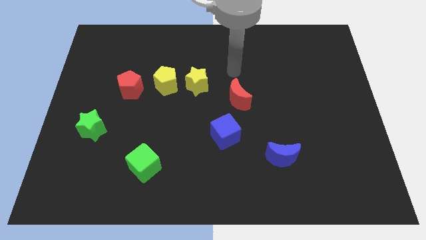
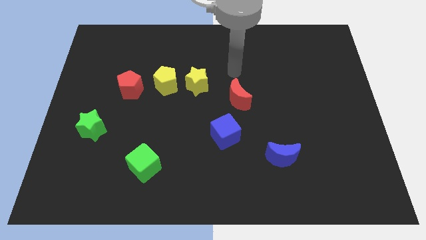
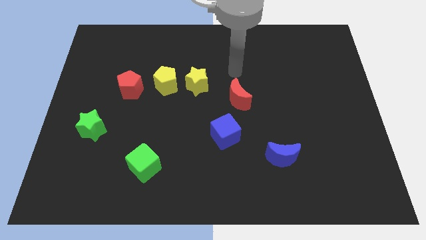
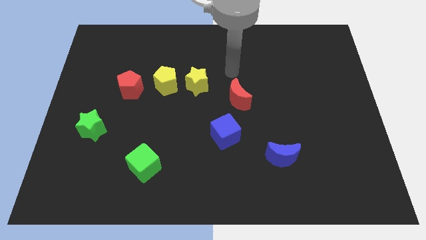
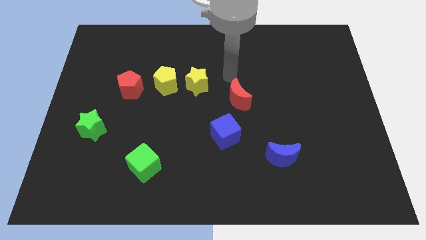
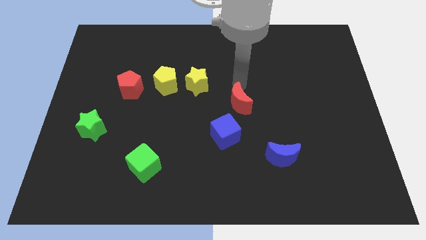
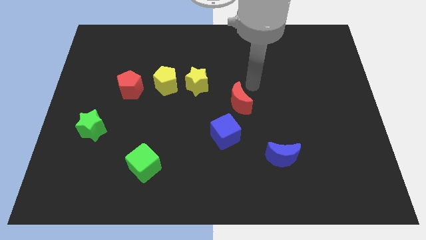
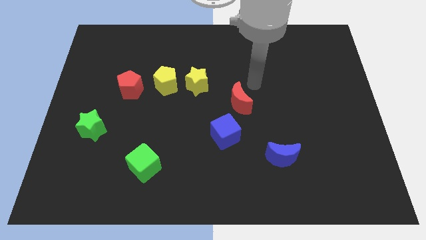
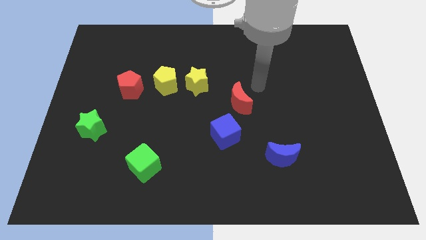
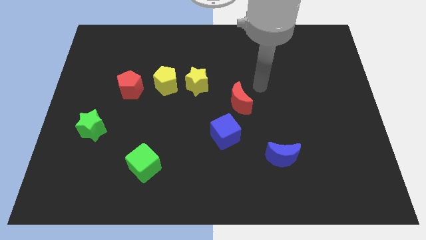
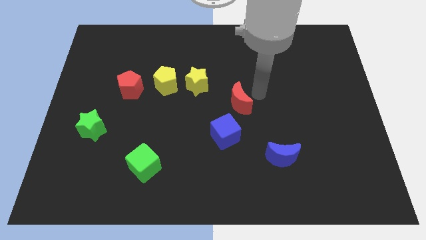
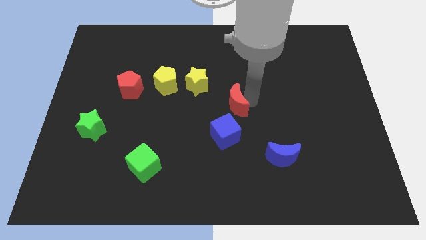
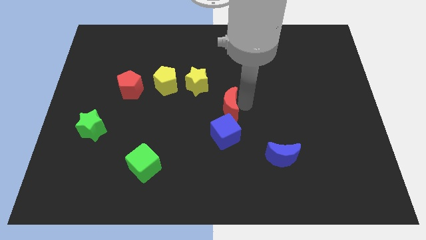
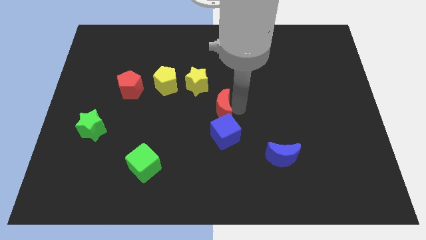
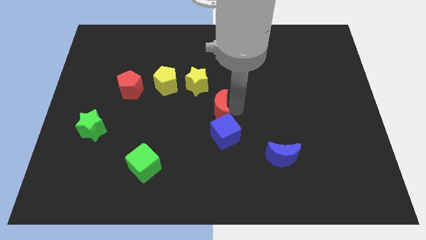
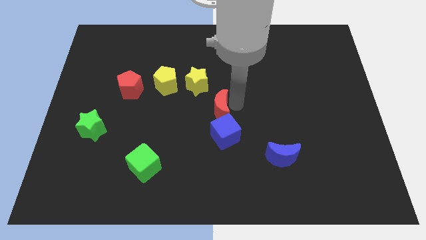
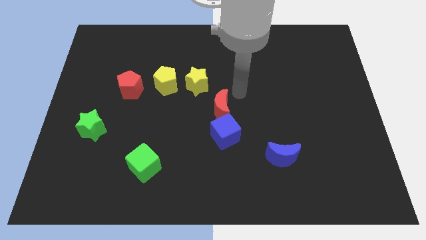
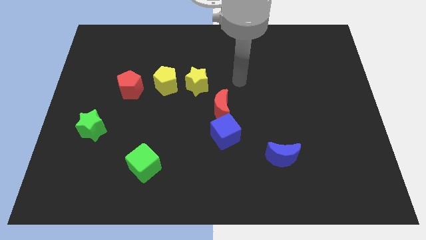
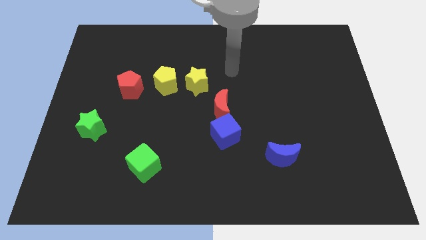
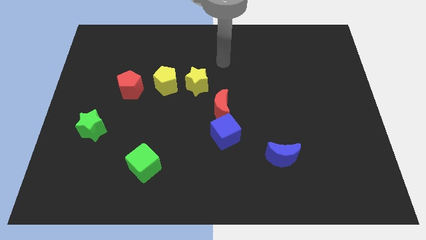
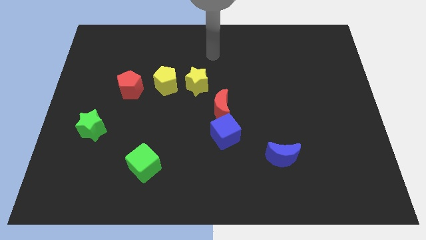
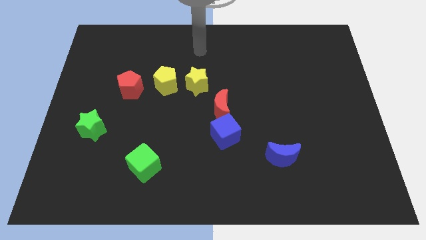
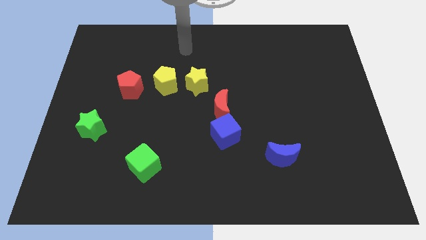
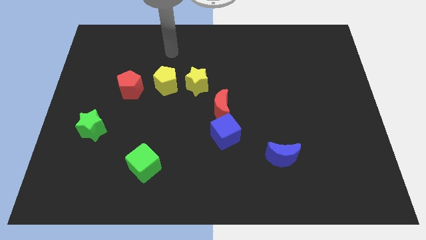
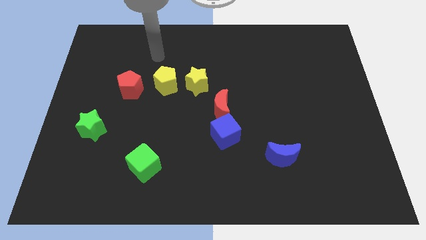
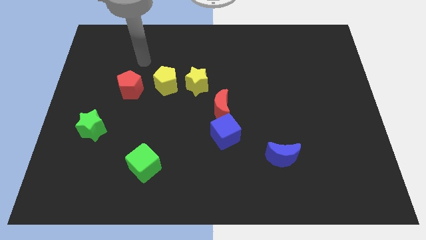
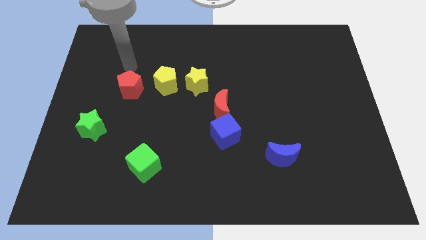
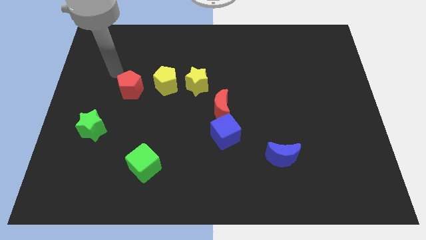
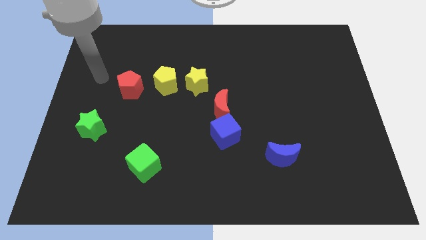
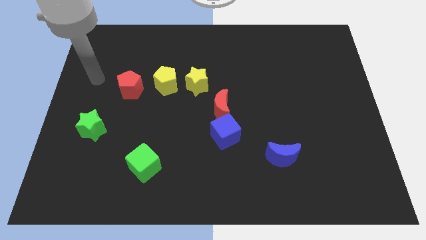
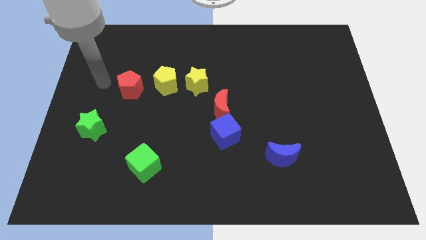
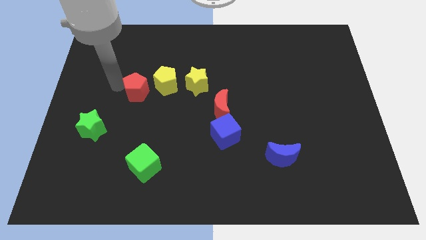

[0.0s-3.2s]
move the red moon above the blue cube

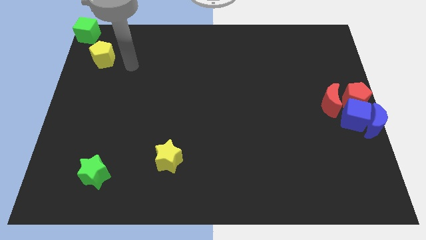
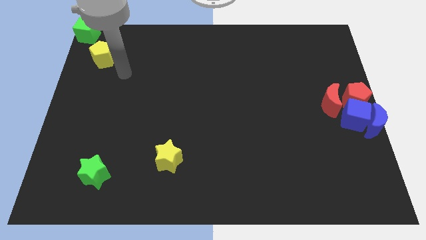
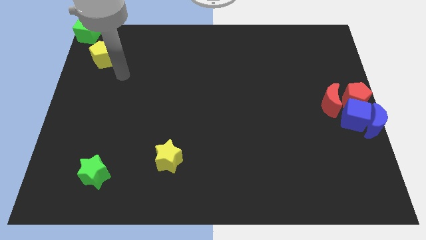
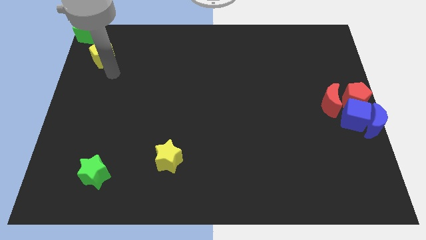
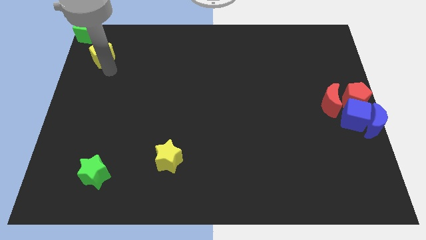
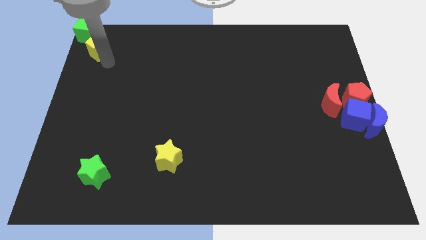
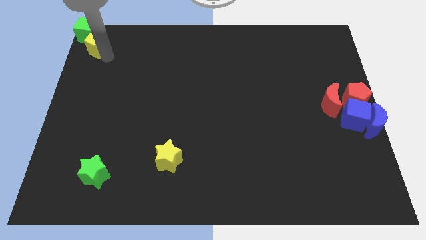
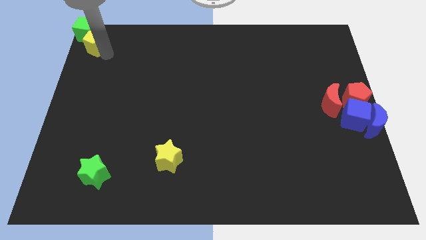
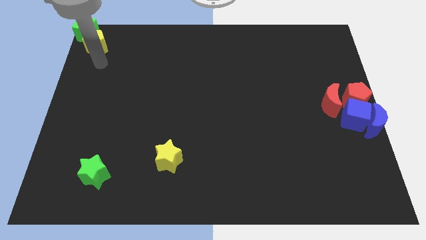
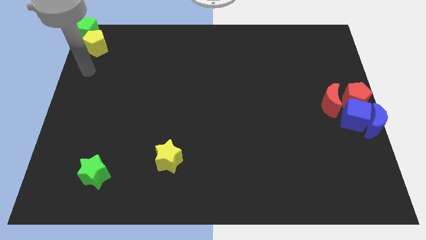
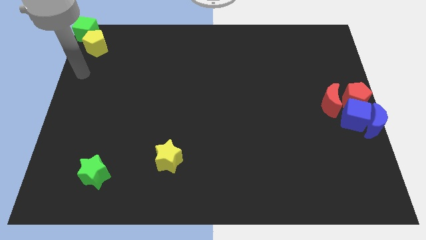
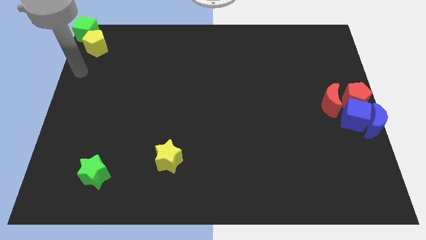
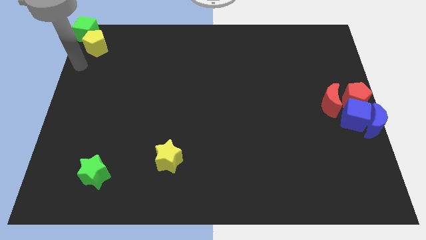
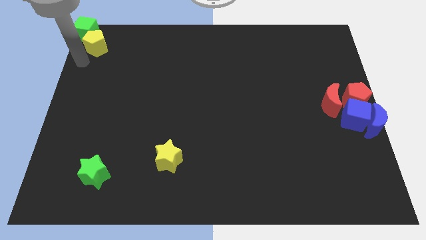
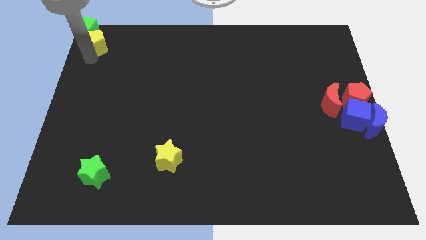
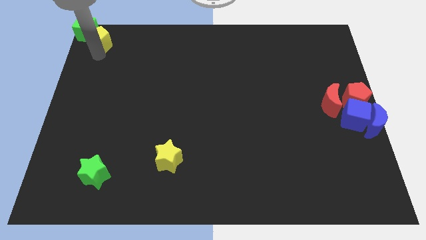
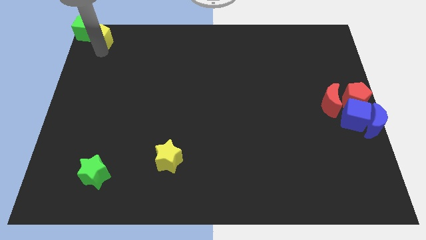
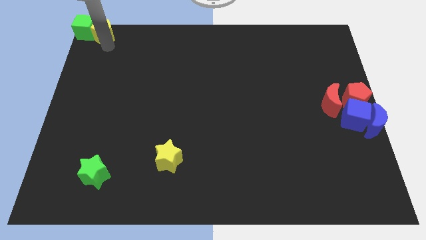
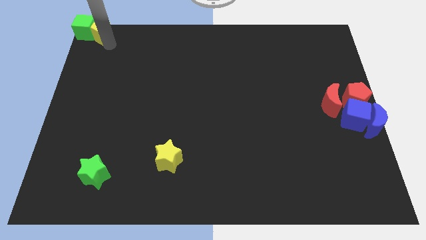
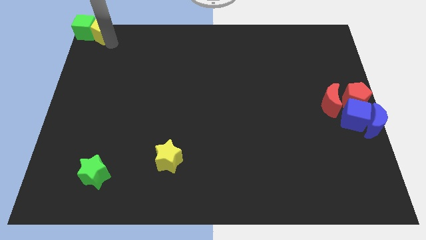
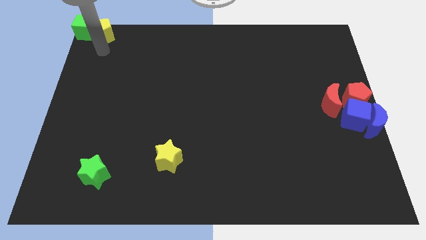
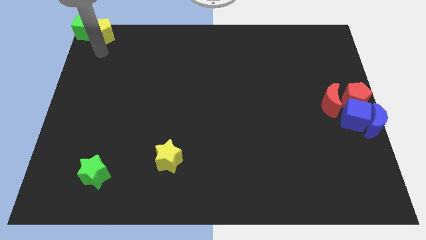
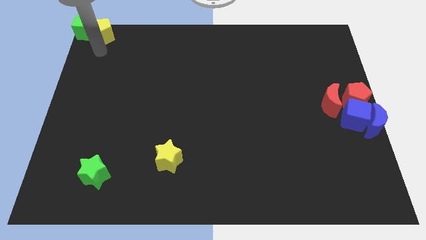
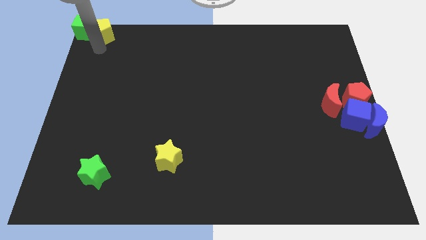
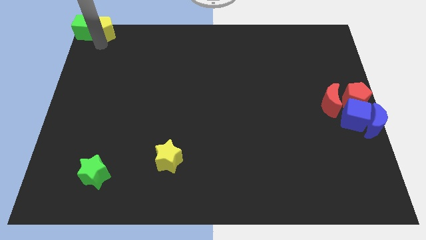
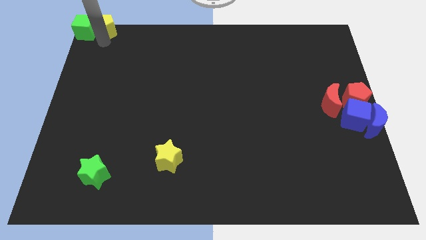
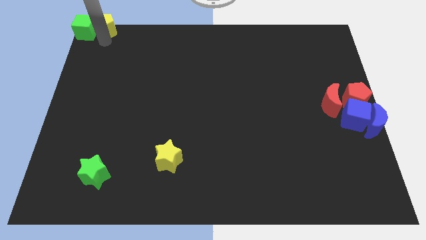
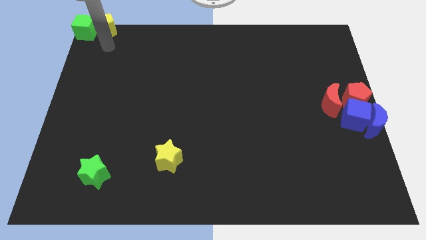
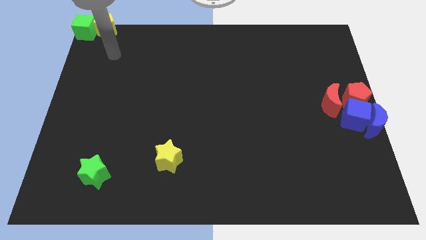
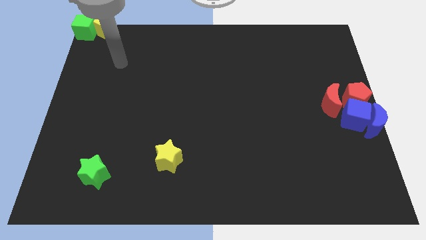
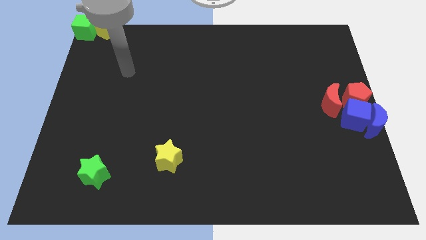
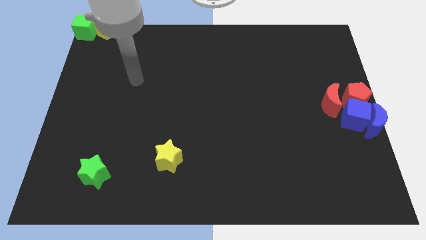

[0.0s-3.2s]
move the yellow pentagon to the right side of the green cube

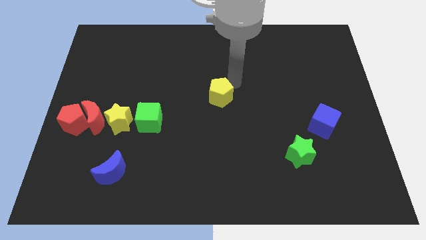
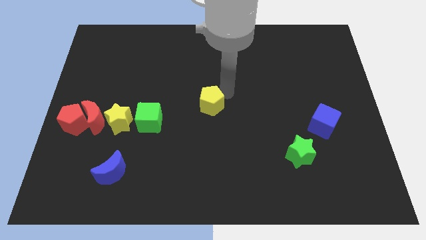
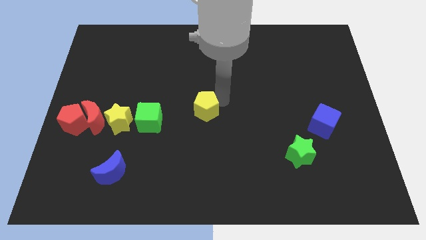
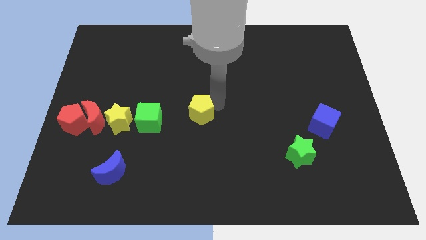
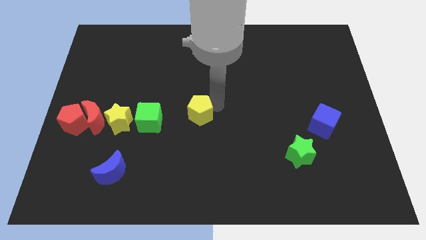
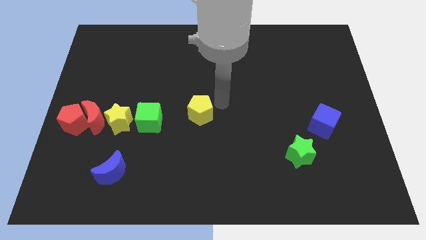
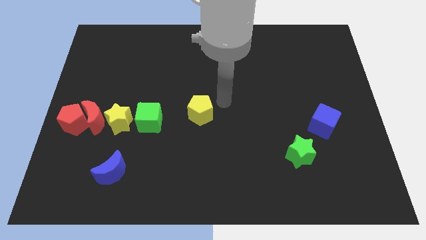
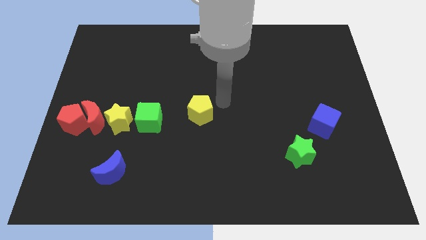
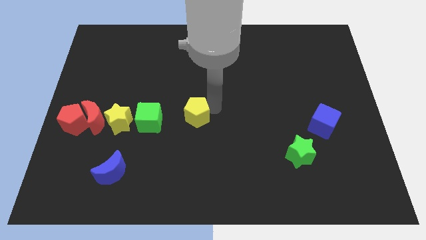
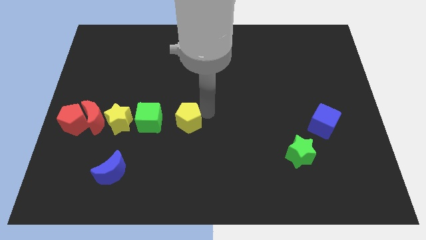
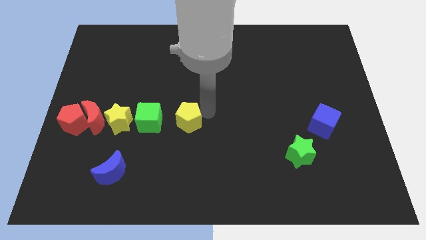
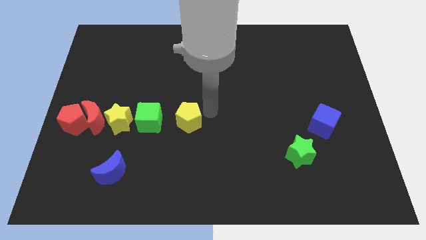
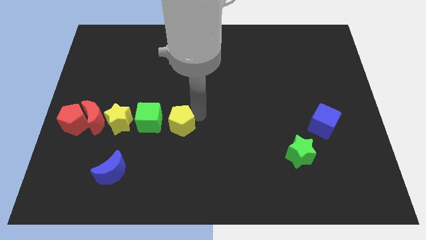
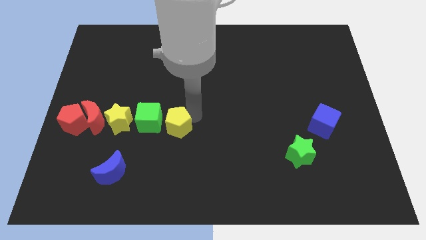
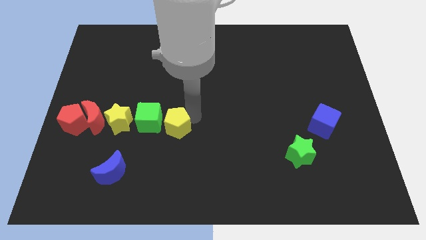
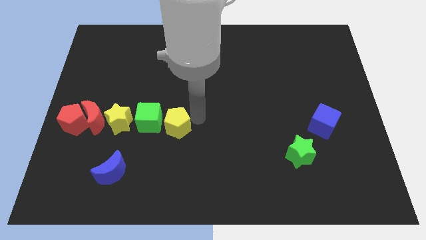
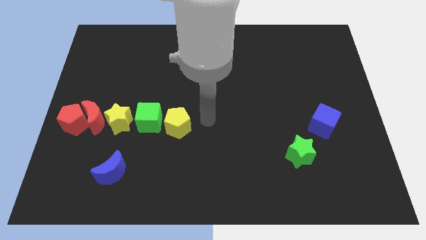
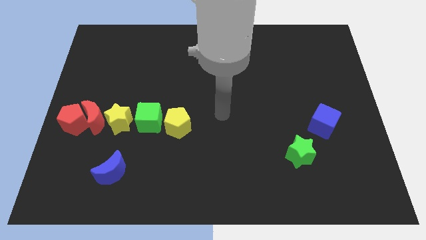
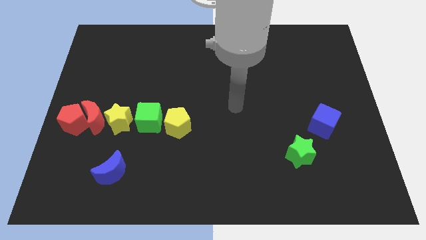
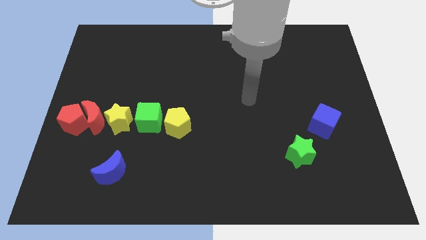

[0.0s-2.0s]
place the yellow pentagon right to the green cube

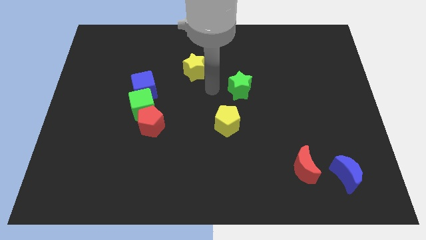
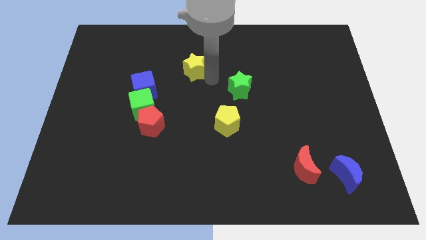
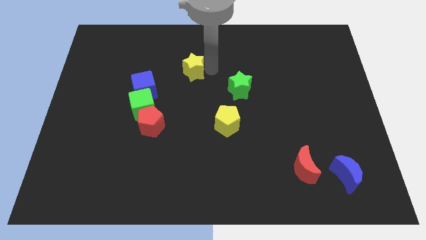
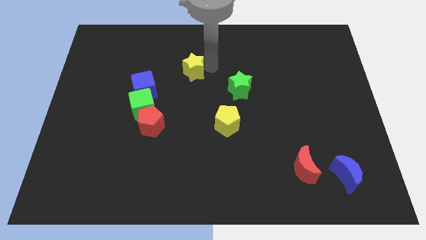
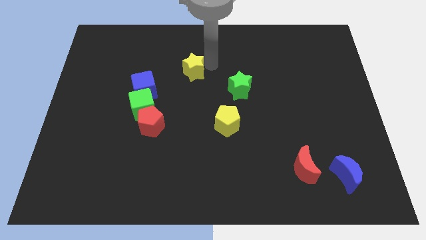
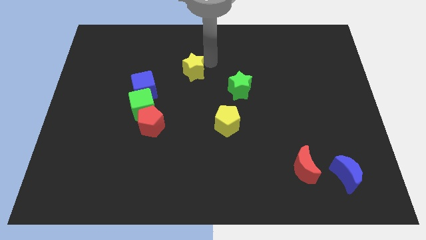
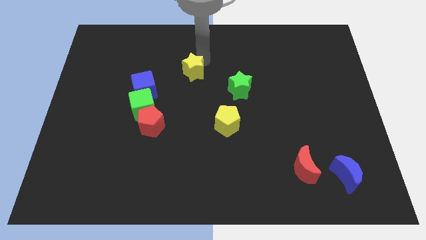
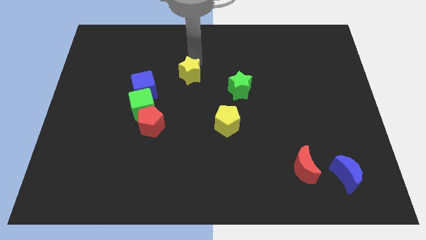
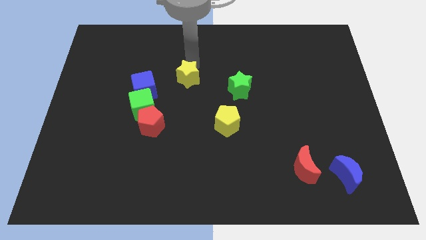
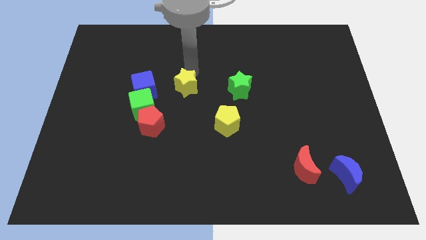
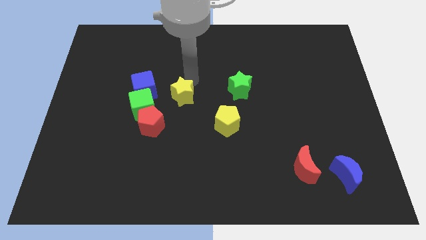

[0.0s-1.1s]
slide yellow star to right of blue cube
